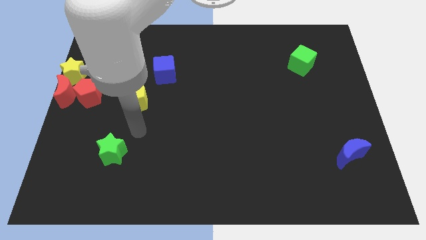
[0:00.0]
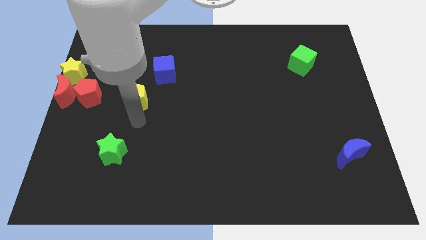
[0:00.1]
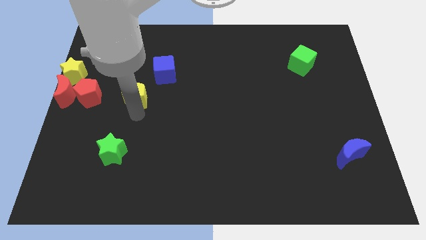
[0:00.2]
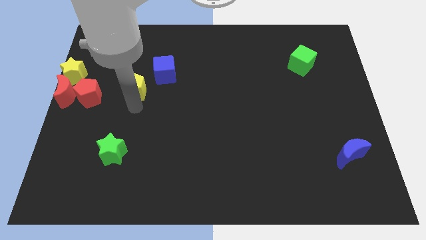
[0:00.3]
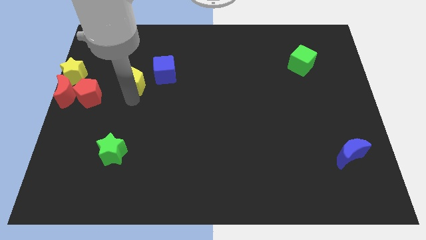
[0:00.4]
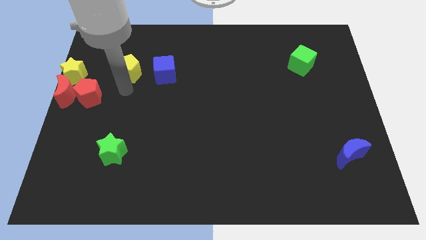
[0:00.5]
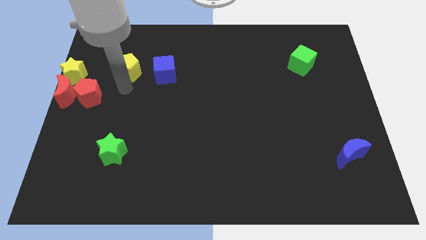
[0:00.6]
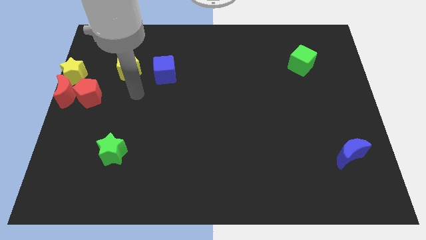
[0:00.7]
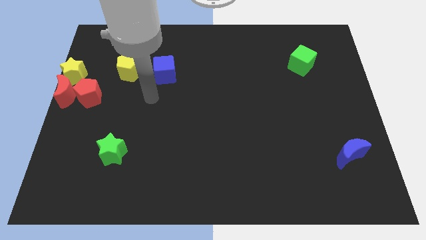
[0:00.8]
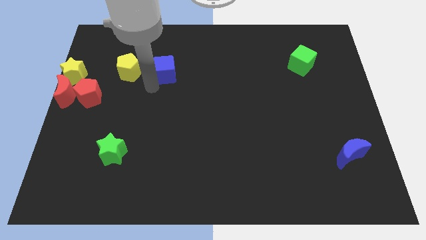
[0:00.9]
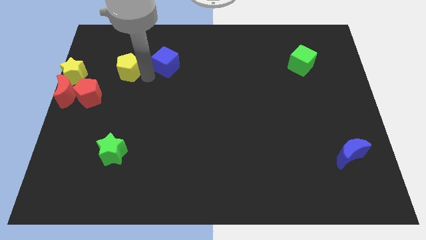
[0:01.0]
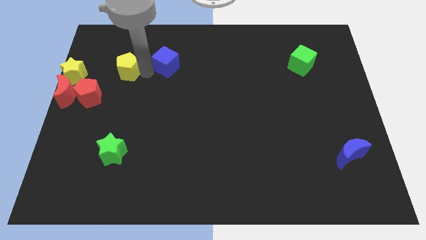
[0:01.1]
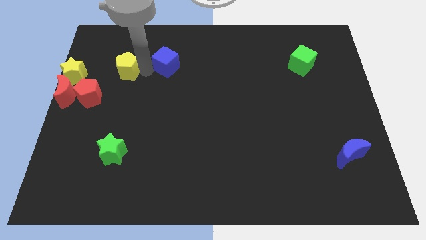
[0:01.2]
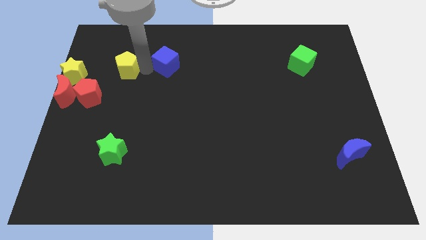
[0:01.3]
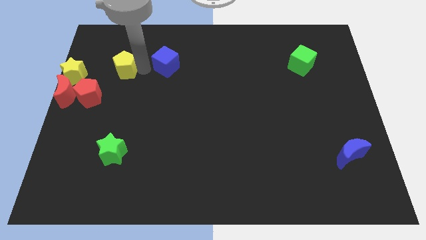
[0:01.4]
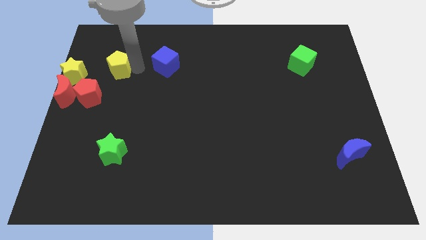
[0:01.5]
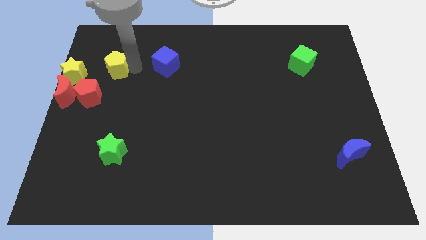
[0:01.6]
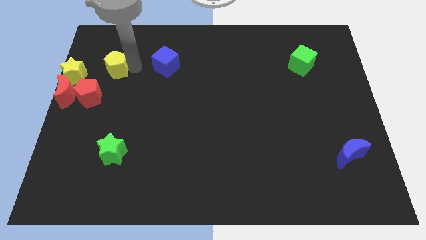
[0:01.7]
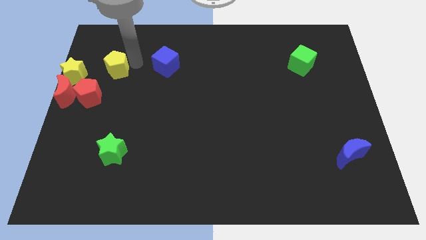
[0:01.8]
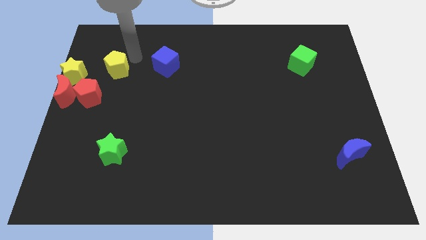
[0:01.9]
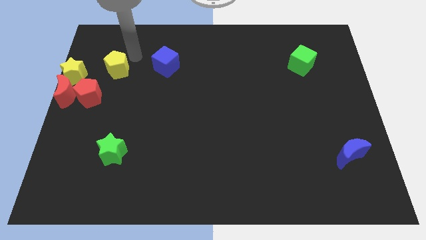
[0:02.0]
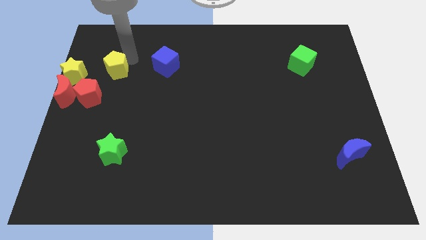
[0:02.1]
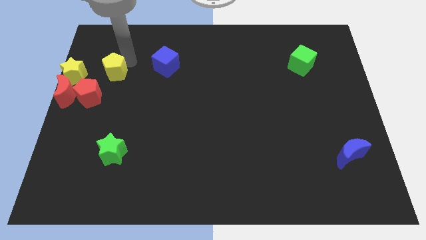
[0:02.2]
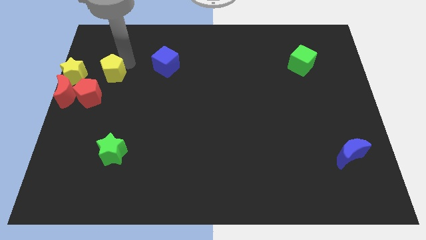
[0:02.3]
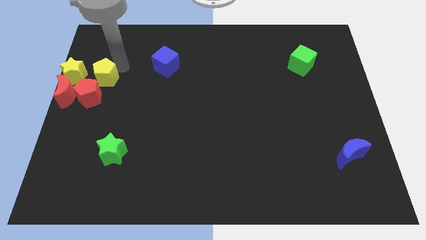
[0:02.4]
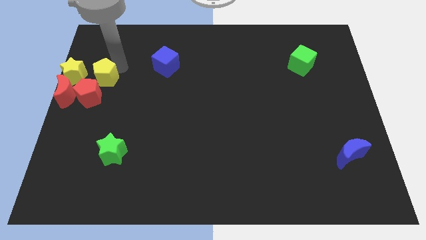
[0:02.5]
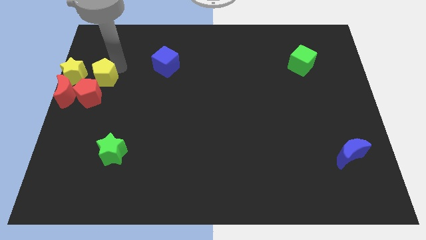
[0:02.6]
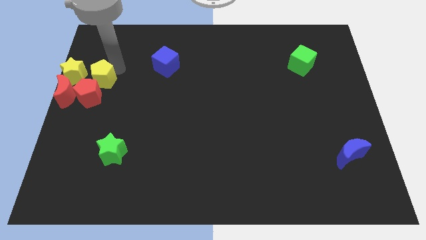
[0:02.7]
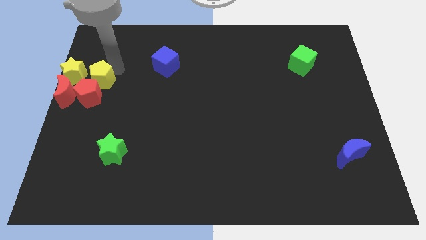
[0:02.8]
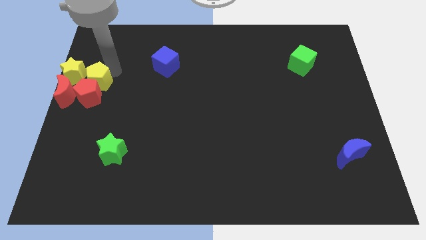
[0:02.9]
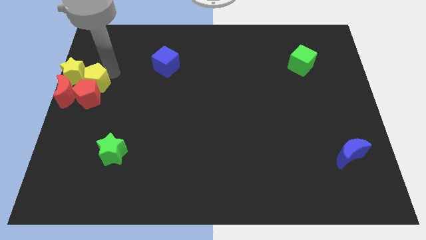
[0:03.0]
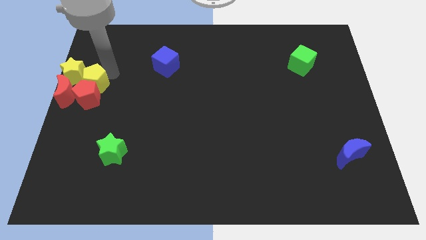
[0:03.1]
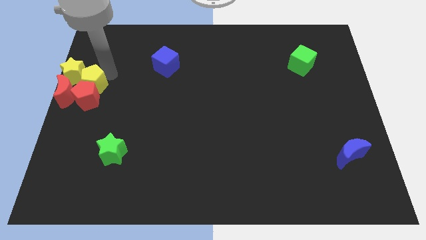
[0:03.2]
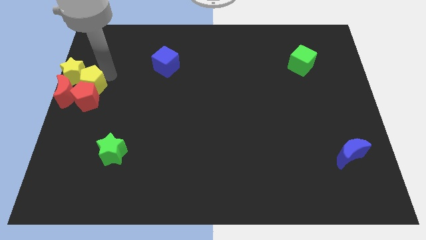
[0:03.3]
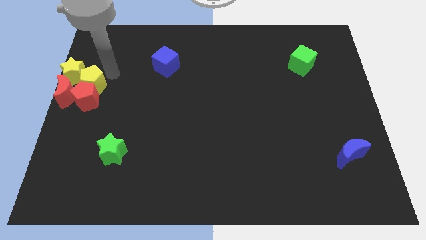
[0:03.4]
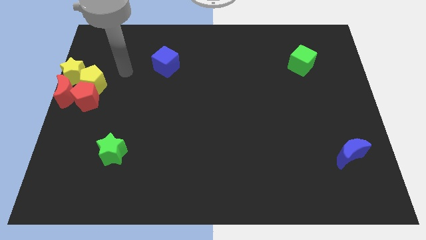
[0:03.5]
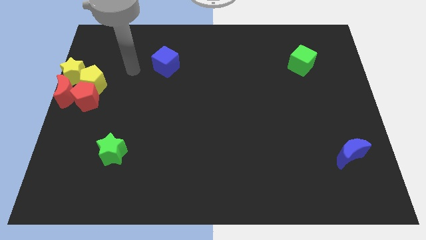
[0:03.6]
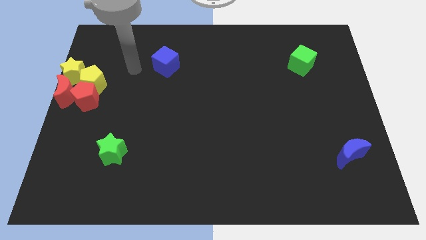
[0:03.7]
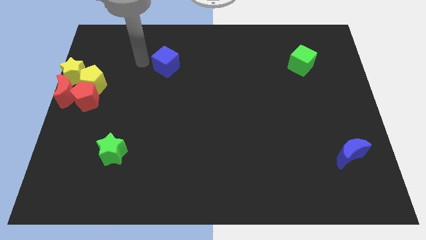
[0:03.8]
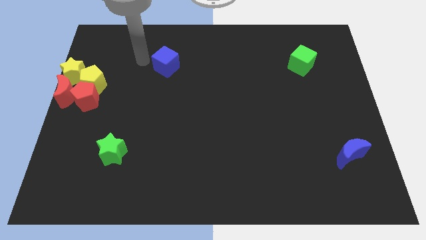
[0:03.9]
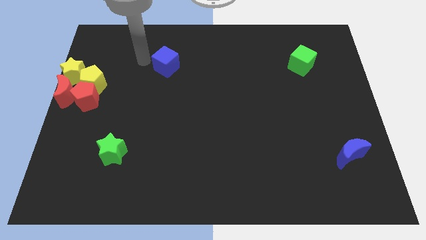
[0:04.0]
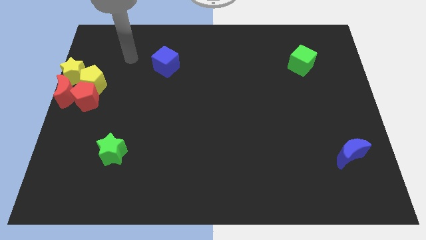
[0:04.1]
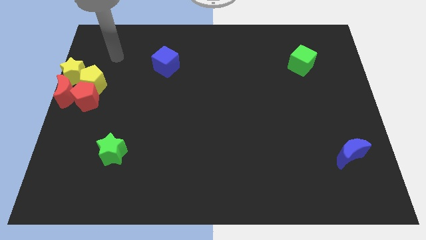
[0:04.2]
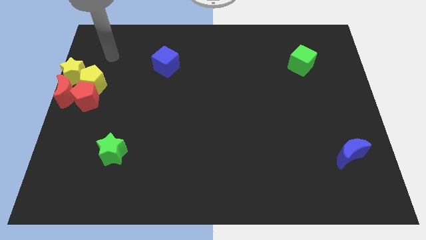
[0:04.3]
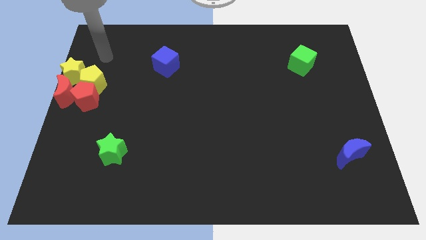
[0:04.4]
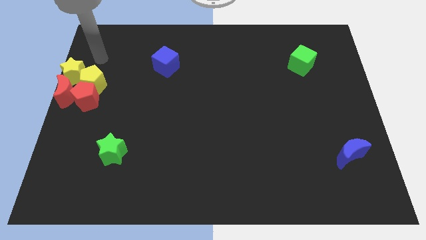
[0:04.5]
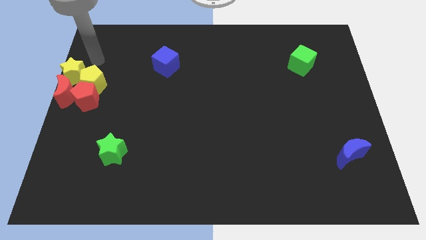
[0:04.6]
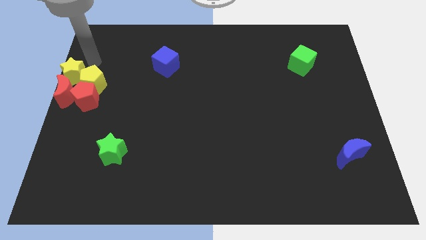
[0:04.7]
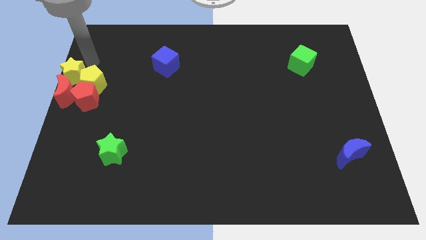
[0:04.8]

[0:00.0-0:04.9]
move yellow pentagon into the red pentagon

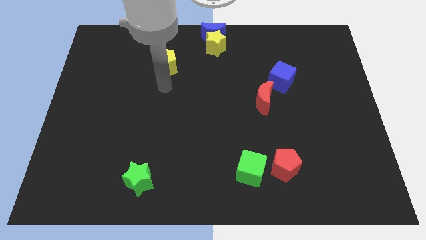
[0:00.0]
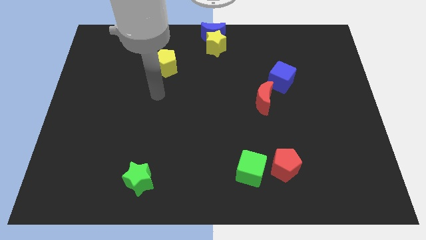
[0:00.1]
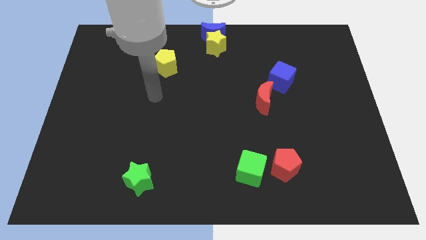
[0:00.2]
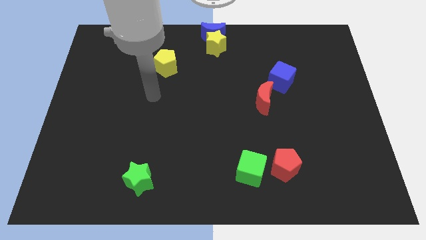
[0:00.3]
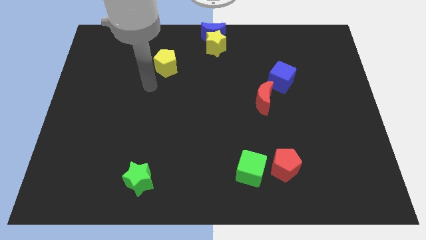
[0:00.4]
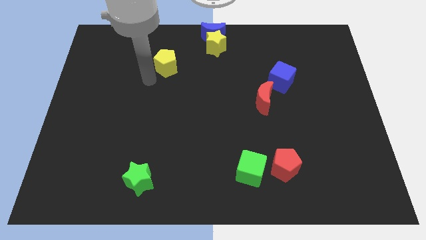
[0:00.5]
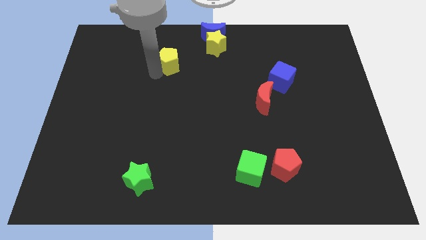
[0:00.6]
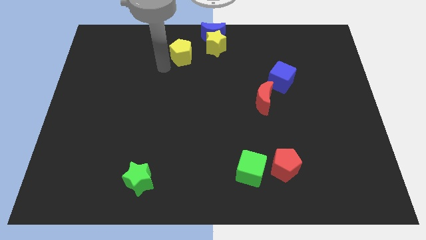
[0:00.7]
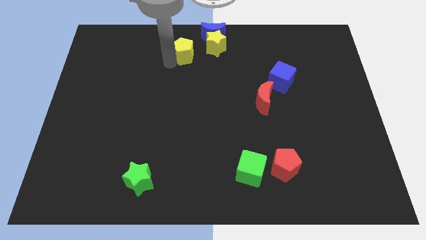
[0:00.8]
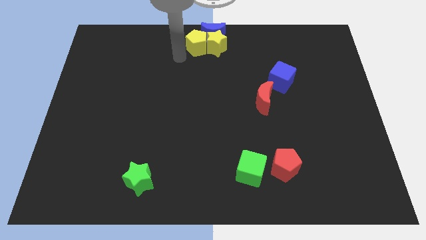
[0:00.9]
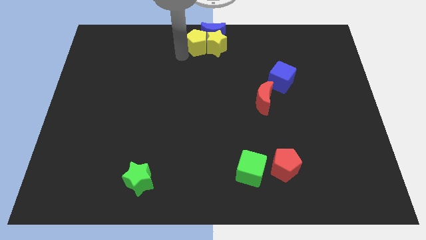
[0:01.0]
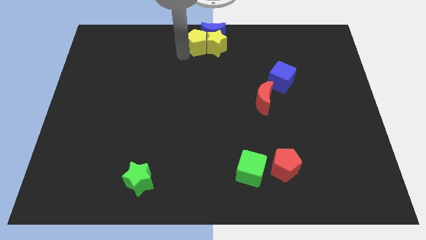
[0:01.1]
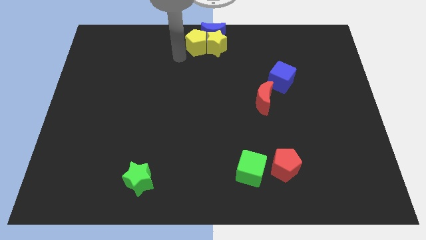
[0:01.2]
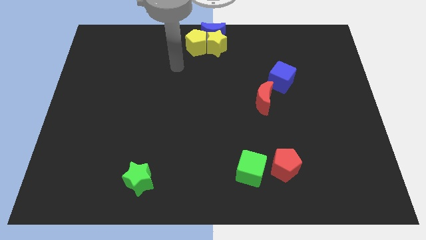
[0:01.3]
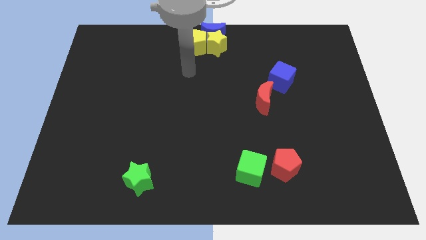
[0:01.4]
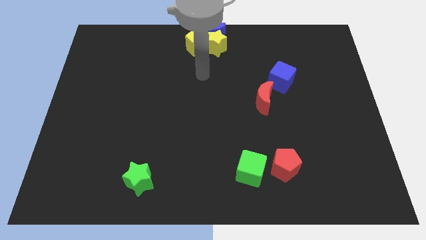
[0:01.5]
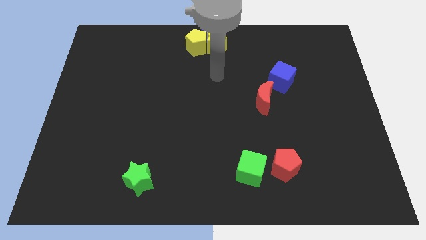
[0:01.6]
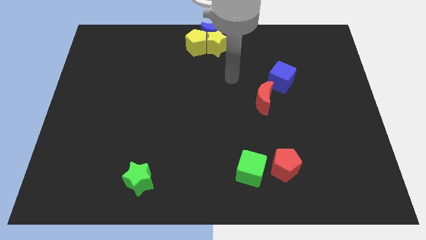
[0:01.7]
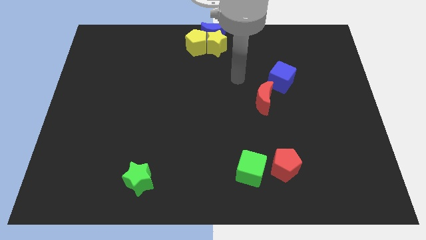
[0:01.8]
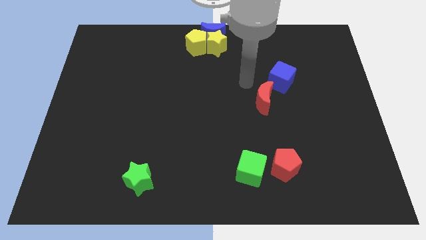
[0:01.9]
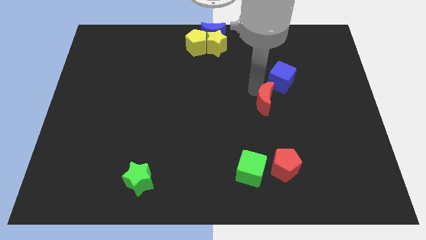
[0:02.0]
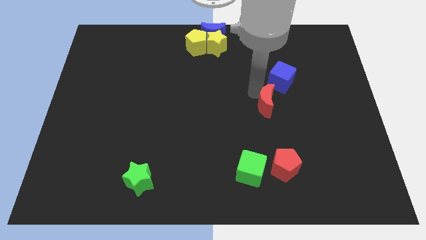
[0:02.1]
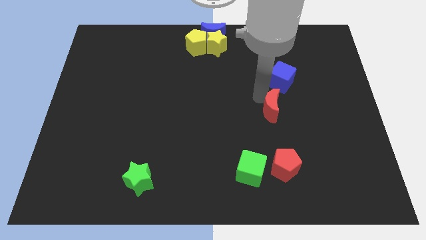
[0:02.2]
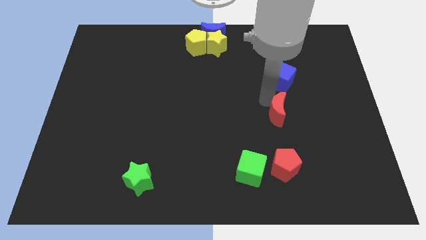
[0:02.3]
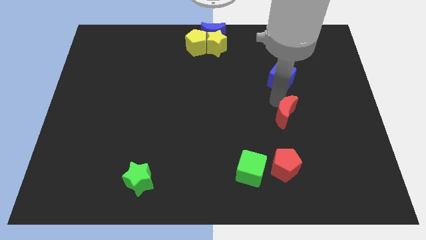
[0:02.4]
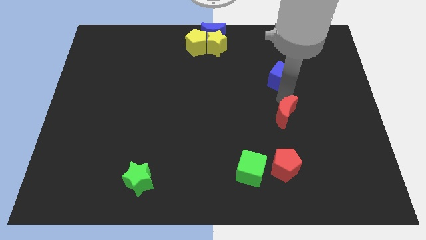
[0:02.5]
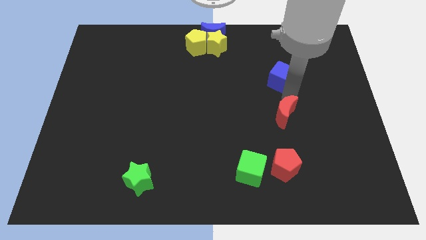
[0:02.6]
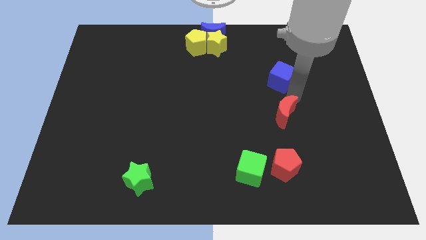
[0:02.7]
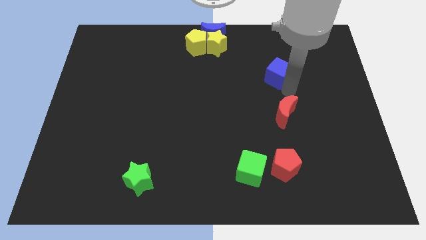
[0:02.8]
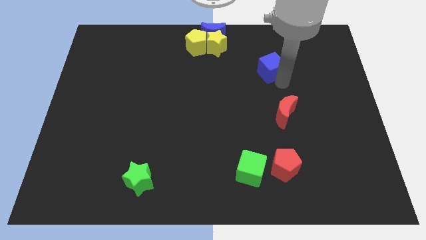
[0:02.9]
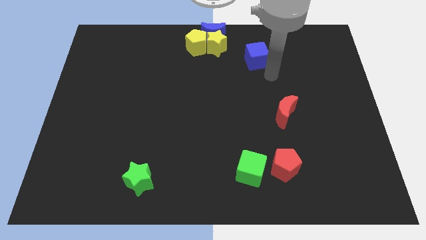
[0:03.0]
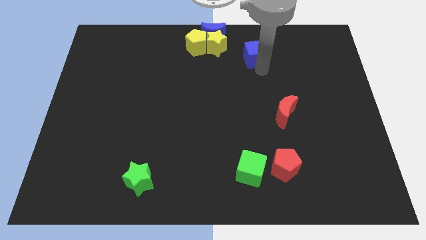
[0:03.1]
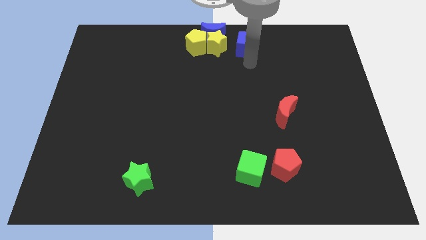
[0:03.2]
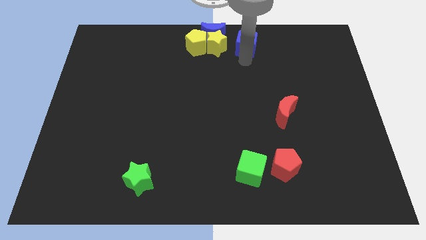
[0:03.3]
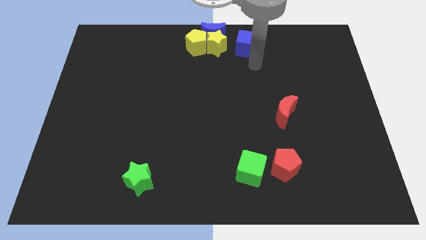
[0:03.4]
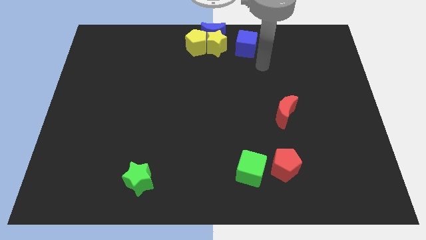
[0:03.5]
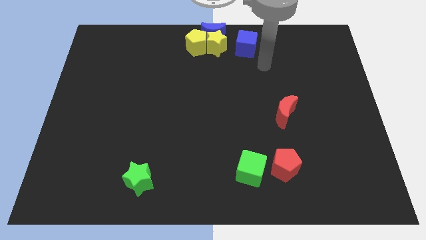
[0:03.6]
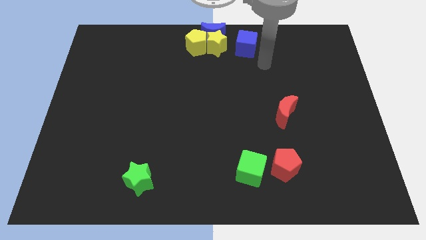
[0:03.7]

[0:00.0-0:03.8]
place the blue cube right to the yellow star

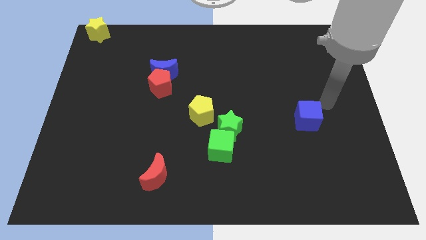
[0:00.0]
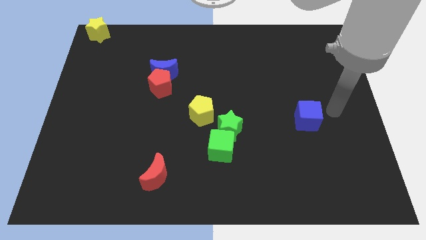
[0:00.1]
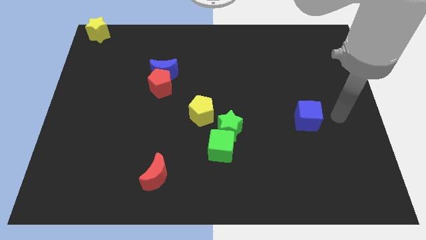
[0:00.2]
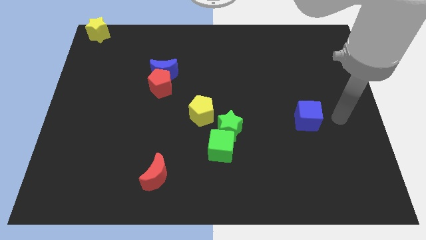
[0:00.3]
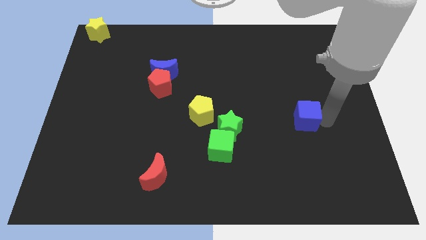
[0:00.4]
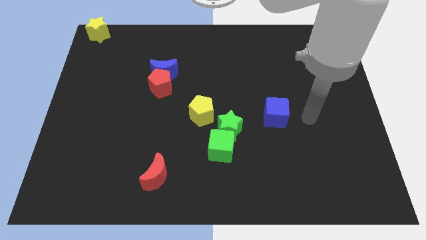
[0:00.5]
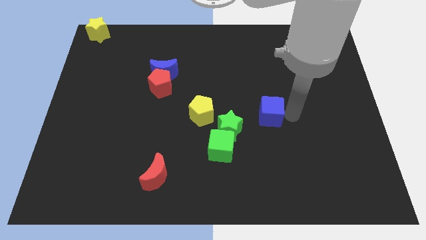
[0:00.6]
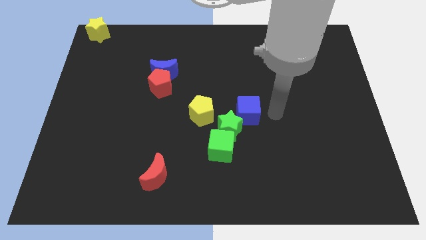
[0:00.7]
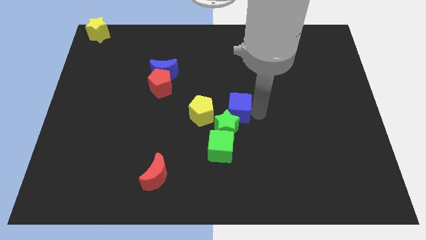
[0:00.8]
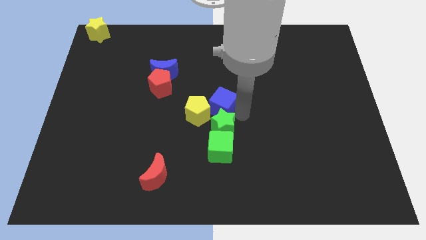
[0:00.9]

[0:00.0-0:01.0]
push the blue cube into the yellow pentagon and green star
